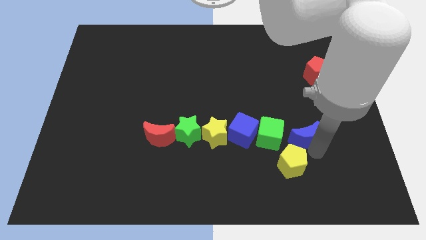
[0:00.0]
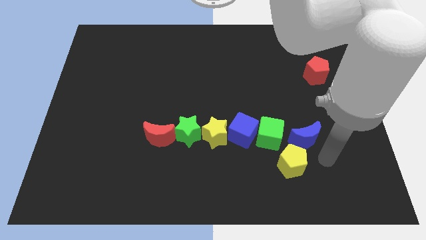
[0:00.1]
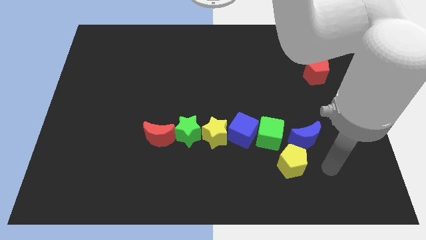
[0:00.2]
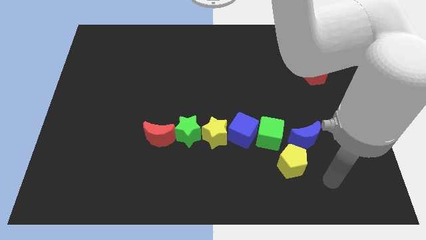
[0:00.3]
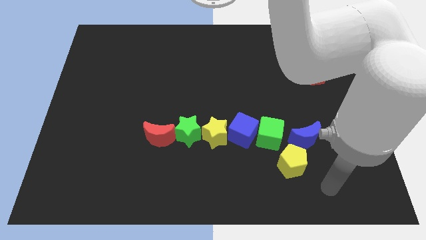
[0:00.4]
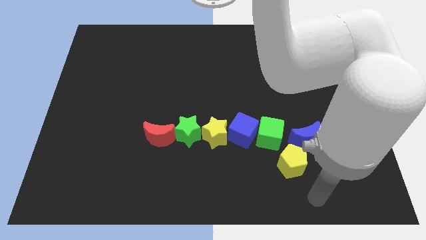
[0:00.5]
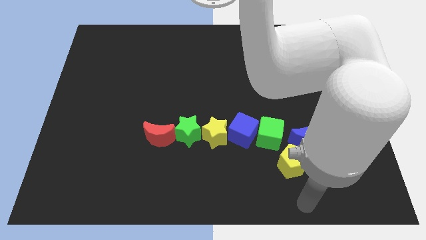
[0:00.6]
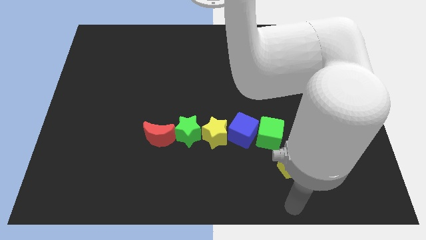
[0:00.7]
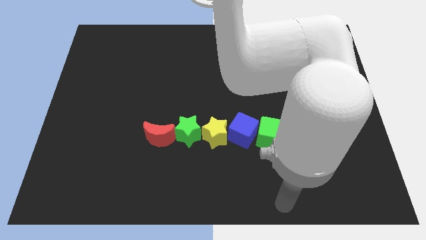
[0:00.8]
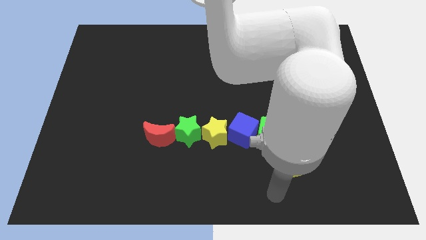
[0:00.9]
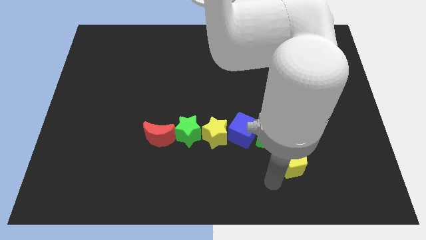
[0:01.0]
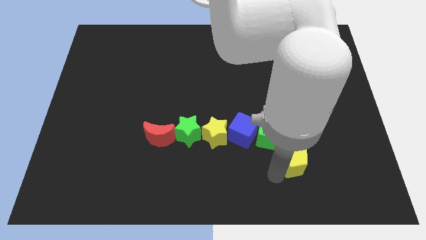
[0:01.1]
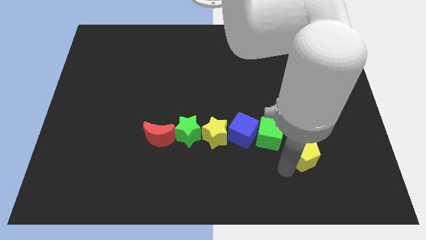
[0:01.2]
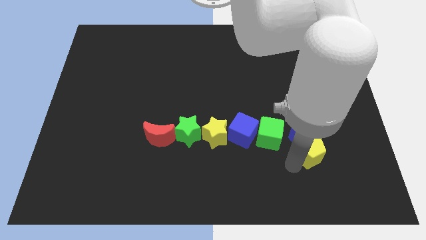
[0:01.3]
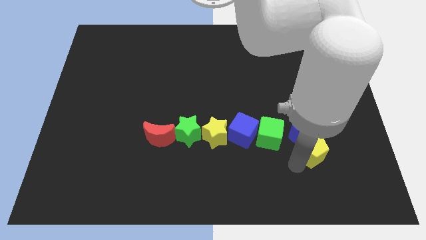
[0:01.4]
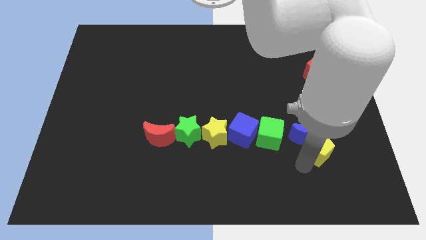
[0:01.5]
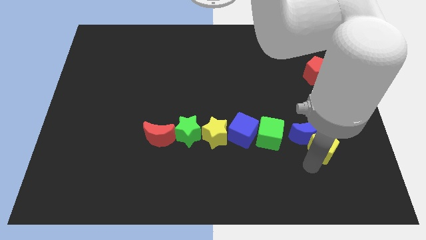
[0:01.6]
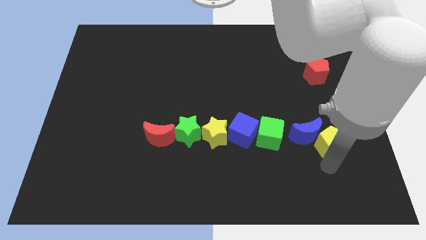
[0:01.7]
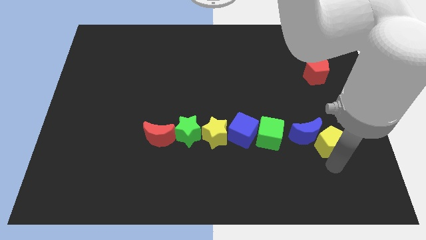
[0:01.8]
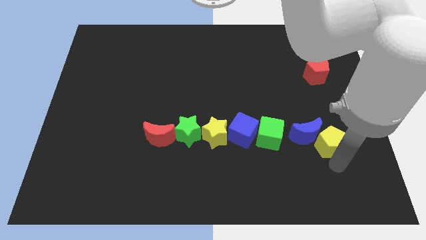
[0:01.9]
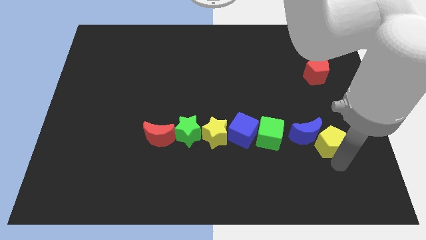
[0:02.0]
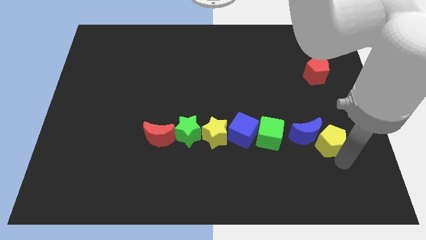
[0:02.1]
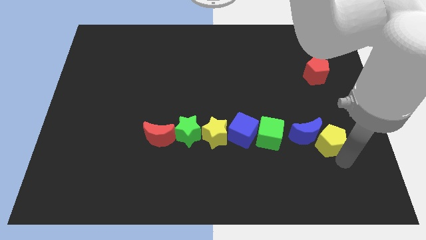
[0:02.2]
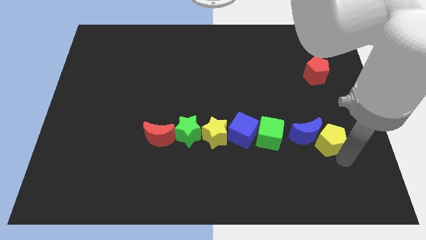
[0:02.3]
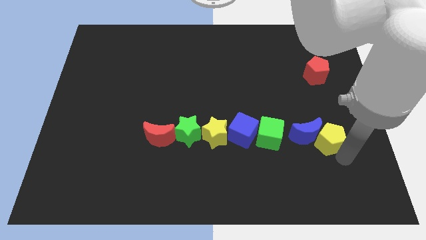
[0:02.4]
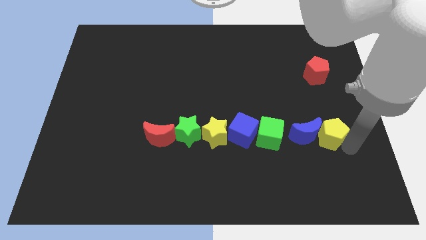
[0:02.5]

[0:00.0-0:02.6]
add the yellow pentagon to the row at the center of the board

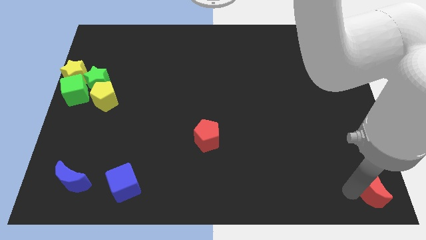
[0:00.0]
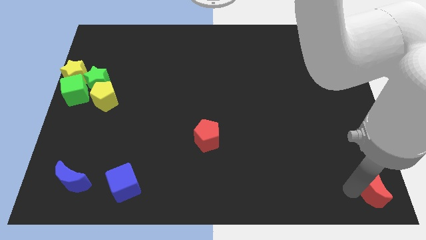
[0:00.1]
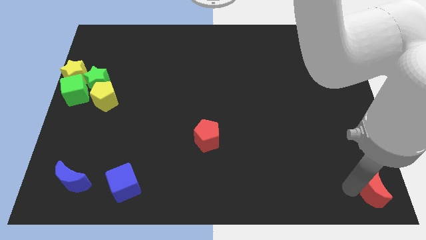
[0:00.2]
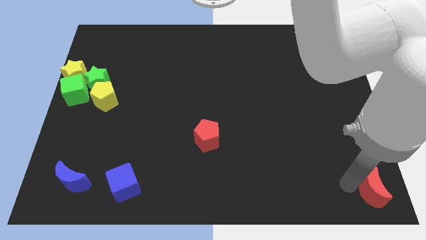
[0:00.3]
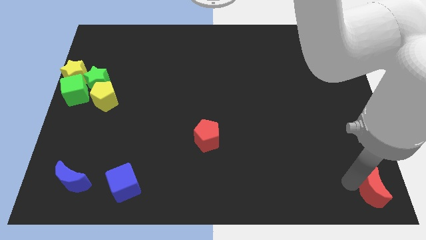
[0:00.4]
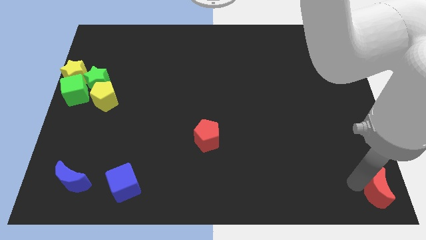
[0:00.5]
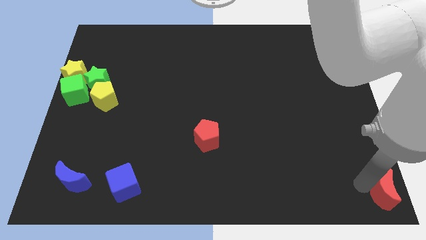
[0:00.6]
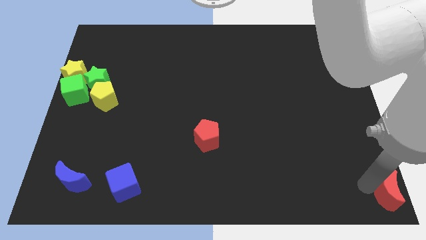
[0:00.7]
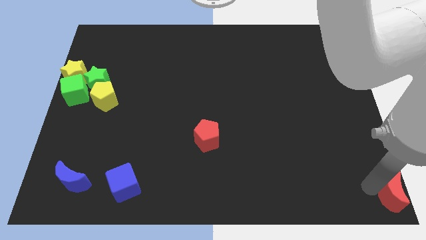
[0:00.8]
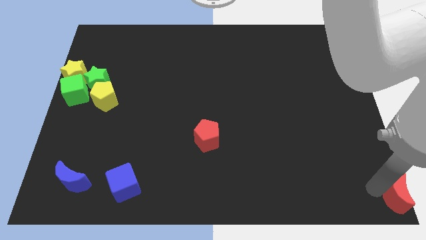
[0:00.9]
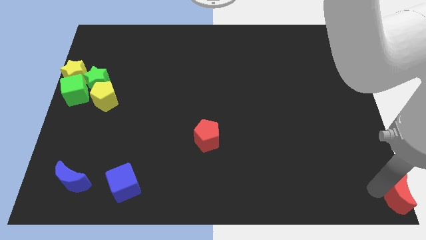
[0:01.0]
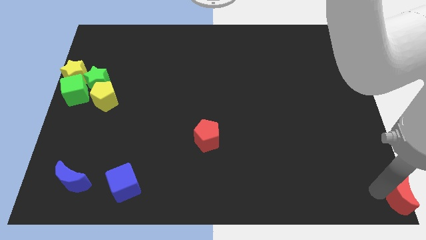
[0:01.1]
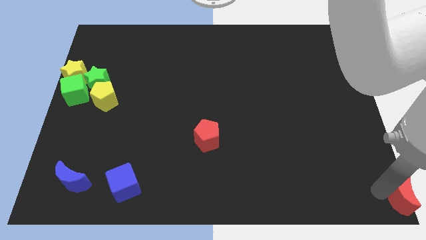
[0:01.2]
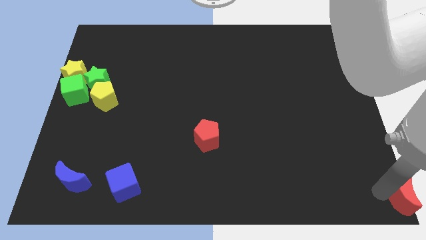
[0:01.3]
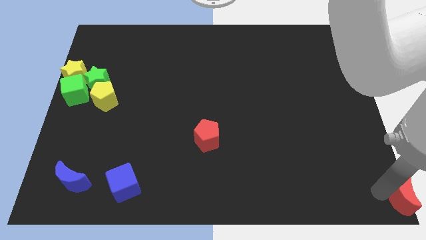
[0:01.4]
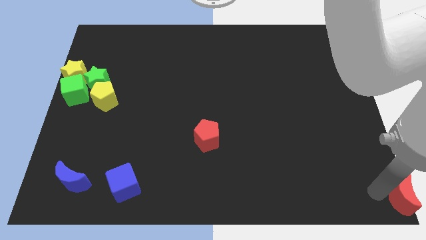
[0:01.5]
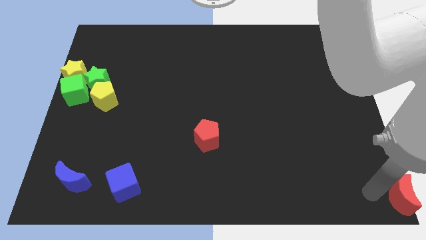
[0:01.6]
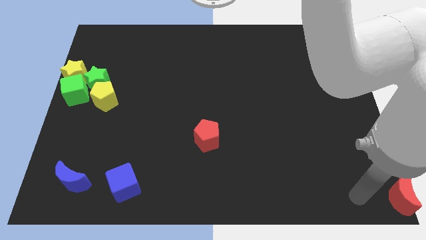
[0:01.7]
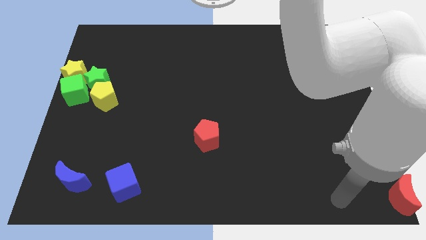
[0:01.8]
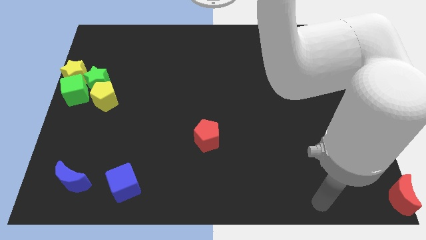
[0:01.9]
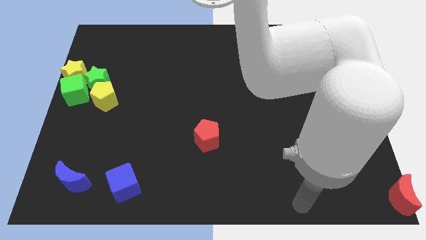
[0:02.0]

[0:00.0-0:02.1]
move the red moon bottom right corner of the board

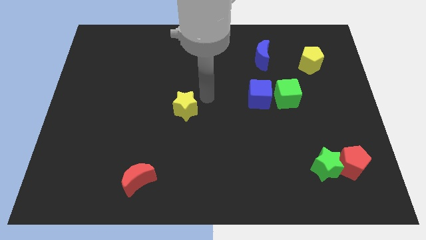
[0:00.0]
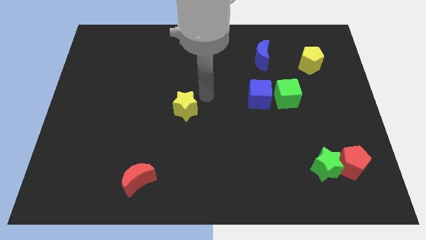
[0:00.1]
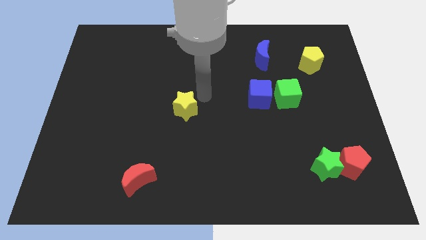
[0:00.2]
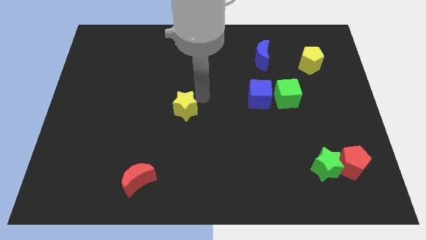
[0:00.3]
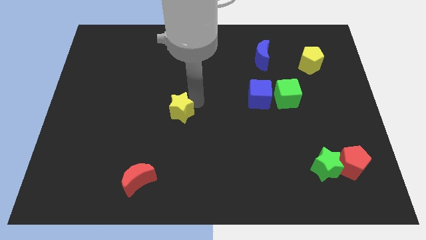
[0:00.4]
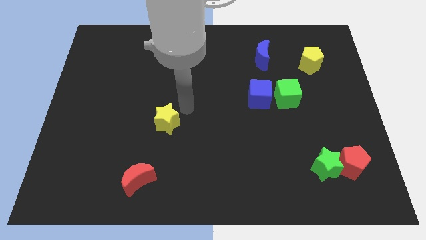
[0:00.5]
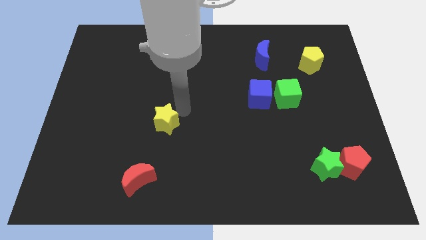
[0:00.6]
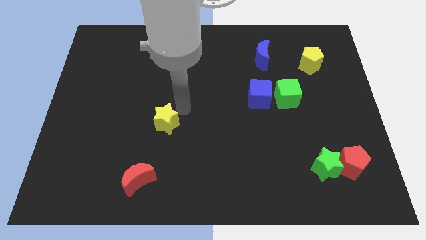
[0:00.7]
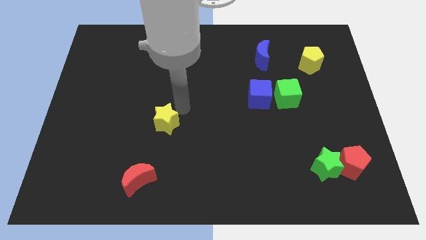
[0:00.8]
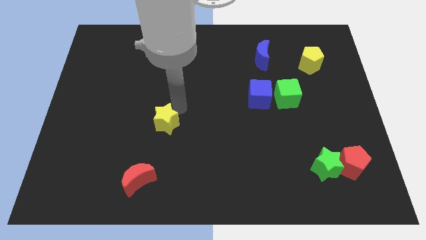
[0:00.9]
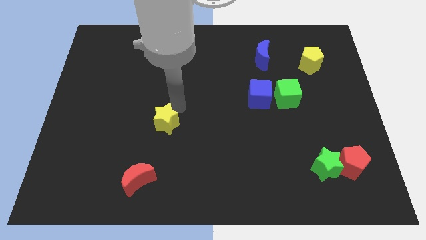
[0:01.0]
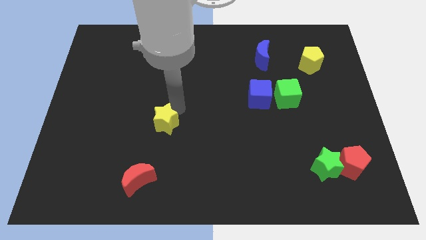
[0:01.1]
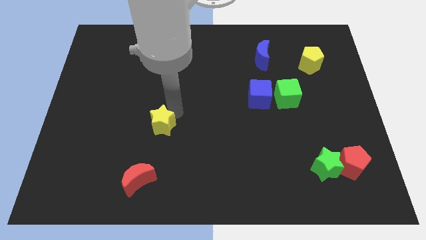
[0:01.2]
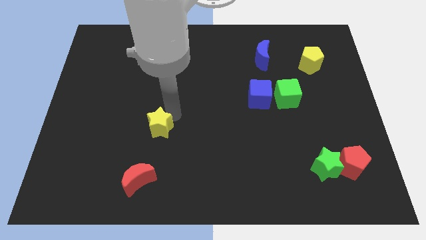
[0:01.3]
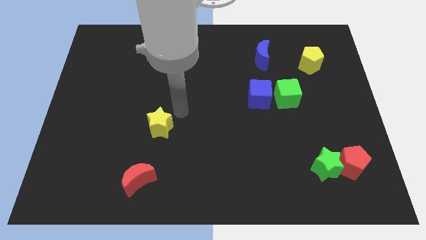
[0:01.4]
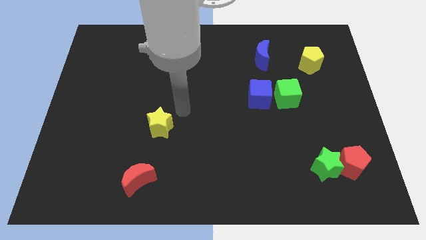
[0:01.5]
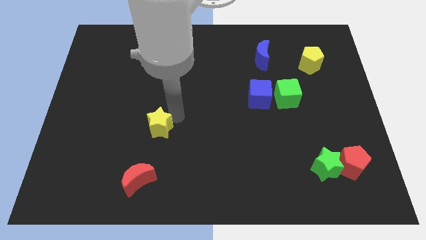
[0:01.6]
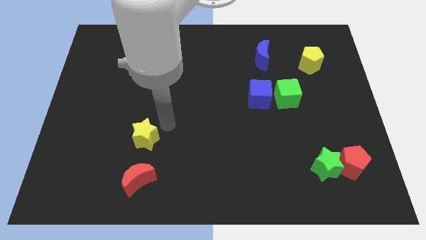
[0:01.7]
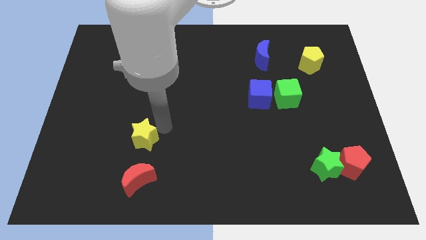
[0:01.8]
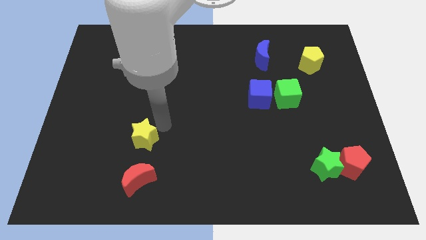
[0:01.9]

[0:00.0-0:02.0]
move the yellow star towards the top of the red crescent

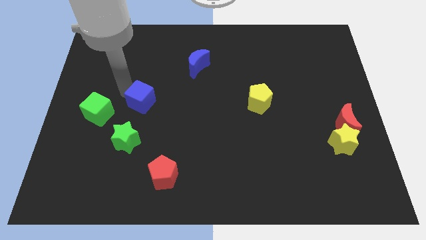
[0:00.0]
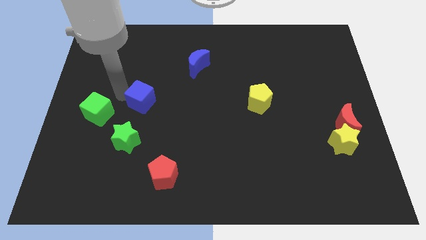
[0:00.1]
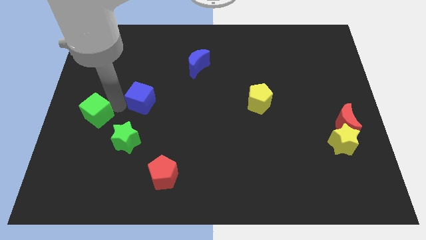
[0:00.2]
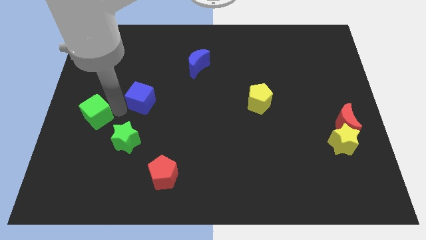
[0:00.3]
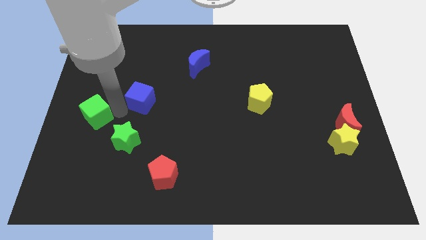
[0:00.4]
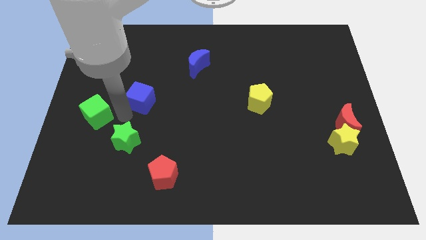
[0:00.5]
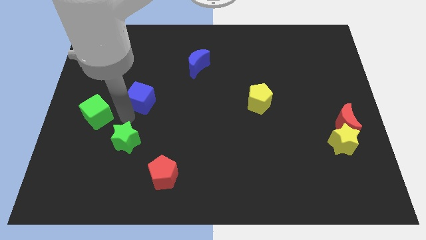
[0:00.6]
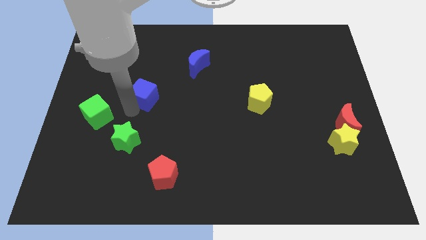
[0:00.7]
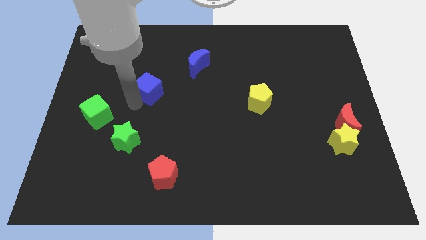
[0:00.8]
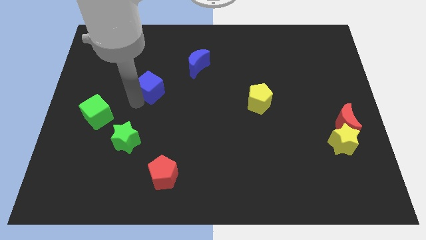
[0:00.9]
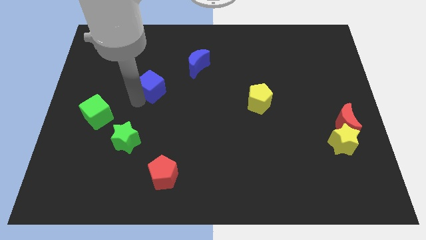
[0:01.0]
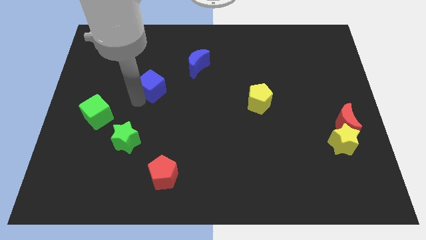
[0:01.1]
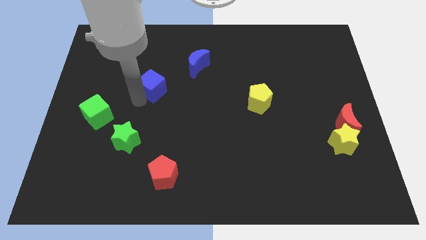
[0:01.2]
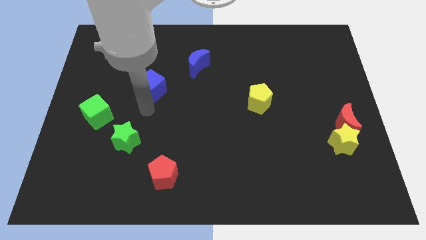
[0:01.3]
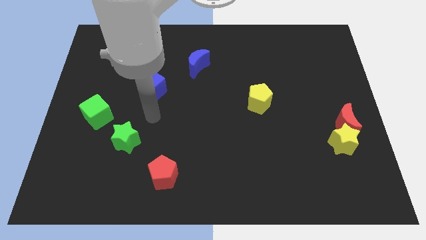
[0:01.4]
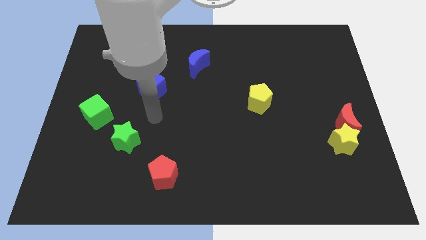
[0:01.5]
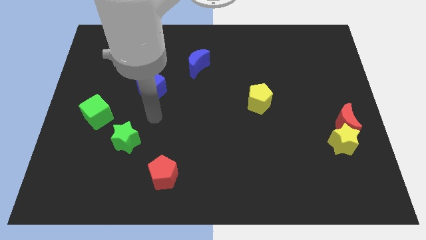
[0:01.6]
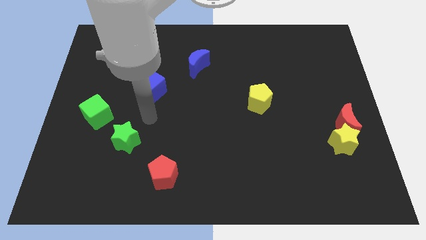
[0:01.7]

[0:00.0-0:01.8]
place blue cube in between the green cube and the blue crescent

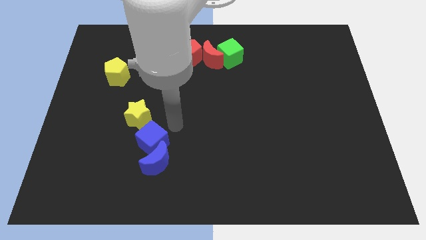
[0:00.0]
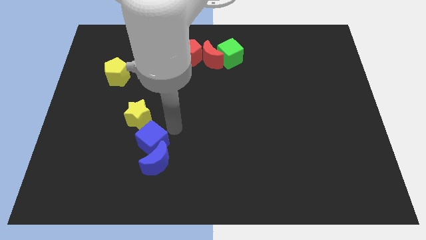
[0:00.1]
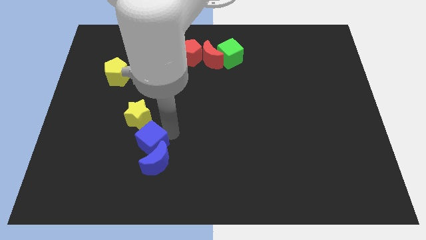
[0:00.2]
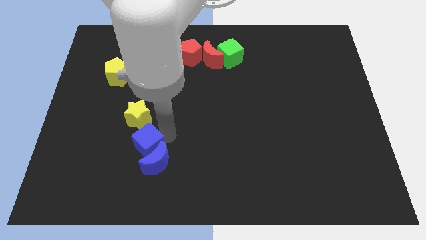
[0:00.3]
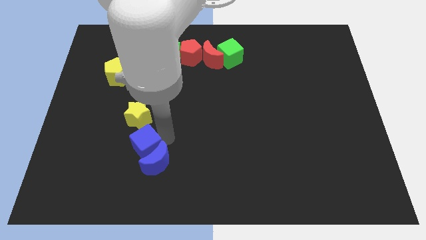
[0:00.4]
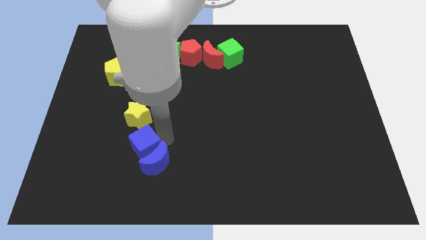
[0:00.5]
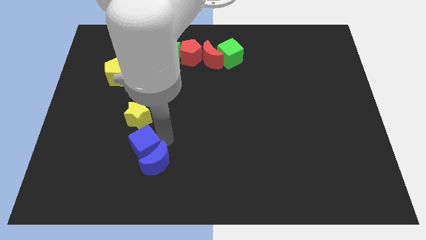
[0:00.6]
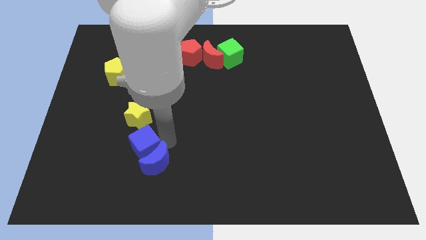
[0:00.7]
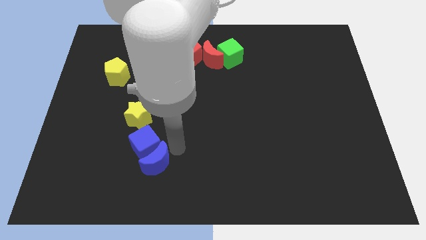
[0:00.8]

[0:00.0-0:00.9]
slightly push the blue cube towards the yellow star
